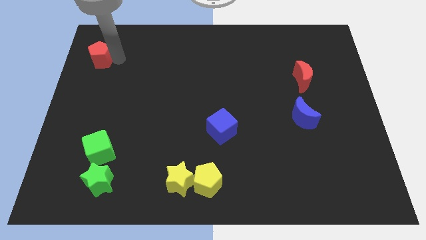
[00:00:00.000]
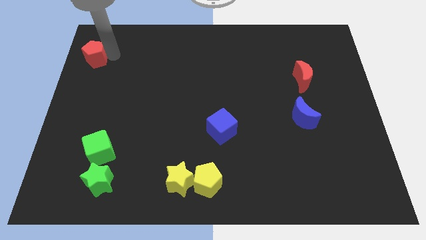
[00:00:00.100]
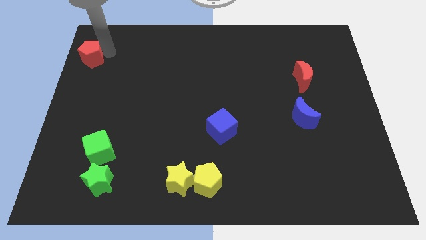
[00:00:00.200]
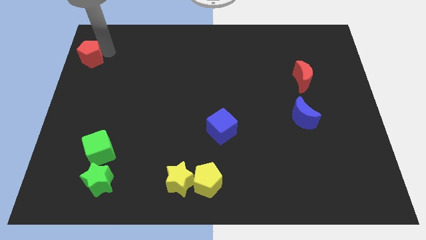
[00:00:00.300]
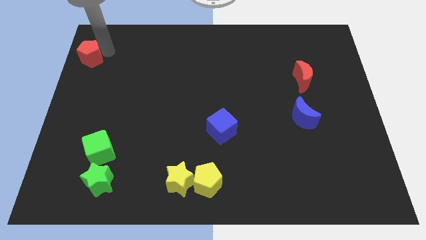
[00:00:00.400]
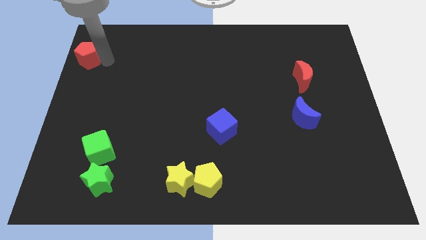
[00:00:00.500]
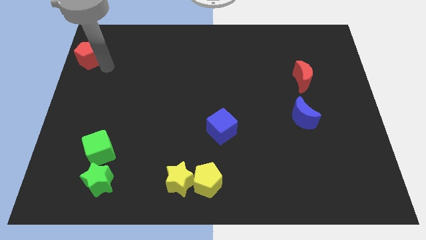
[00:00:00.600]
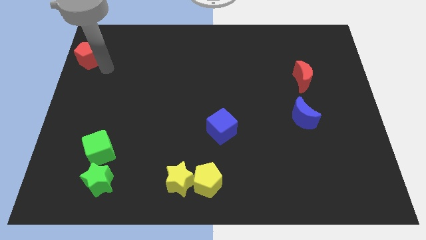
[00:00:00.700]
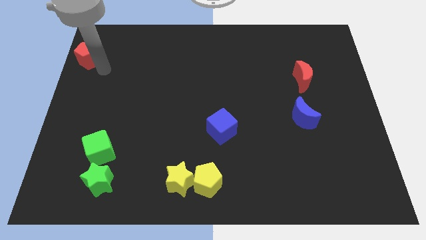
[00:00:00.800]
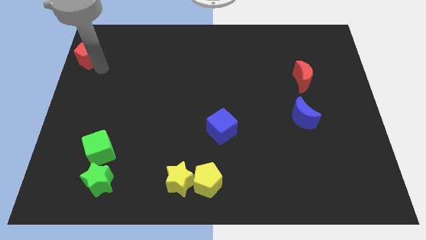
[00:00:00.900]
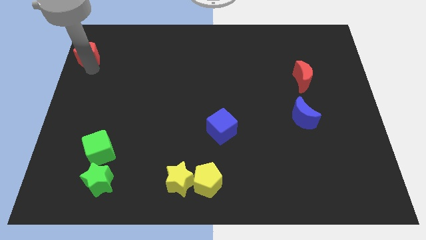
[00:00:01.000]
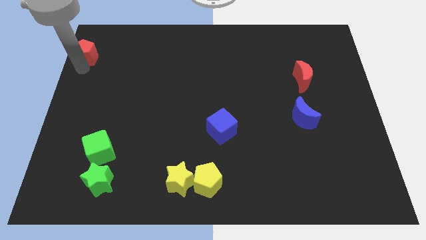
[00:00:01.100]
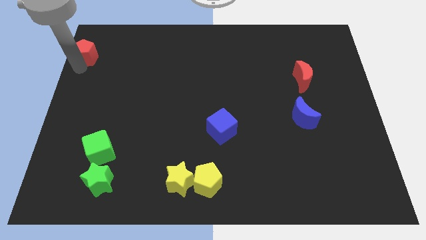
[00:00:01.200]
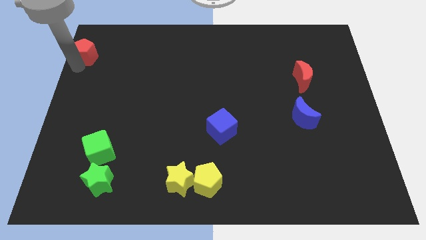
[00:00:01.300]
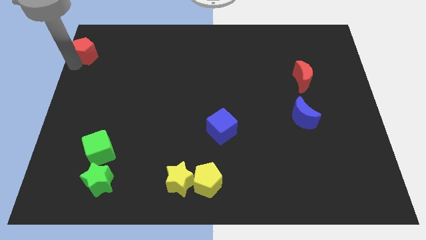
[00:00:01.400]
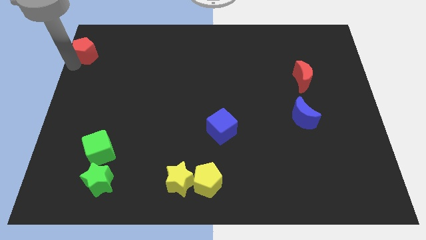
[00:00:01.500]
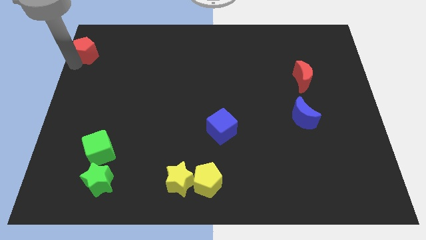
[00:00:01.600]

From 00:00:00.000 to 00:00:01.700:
move the red pentagon to the top left

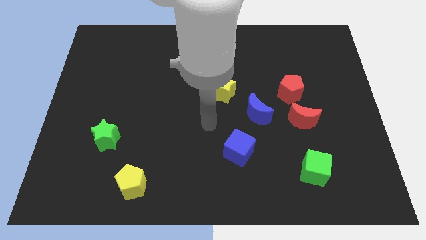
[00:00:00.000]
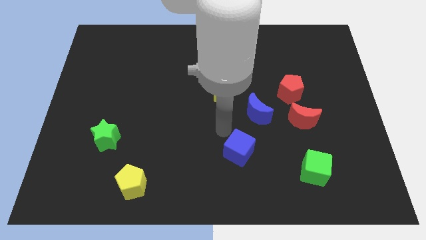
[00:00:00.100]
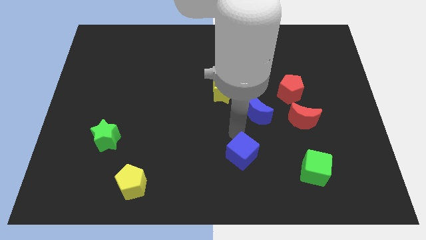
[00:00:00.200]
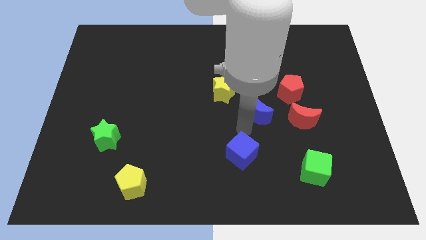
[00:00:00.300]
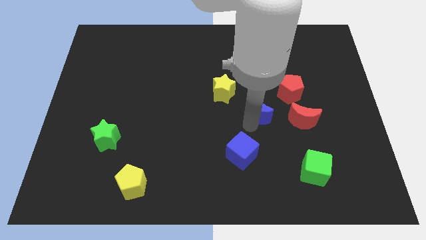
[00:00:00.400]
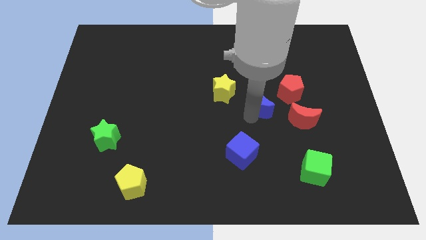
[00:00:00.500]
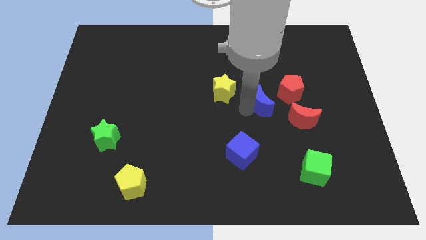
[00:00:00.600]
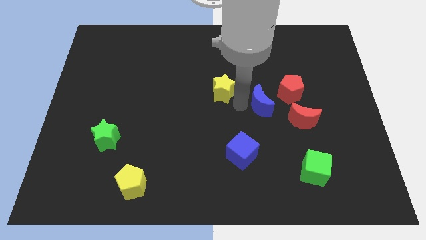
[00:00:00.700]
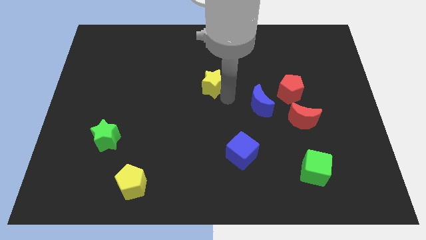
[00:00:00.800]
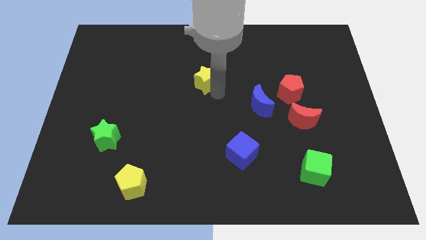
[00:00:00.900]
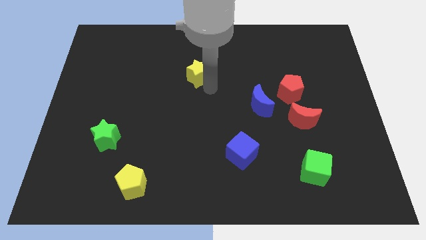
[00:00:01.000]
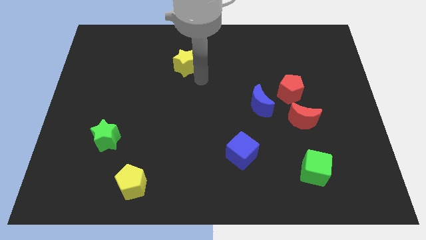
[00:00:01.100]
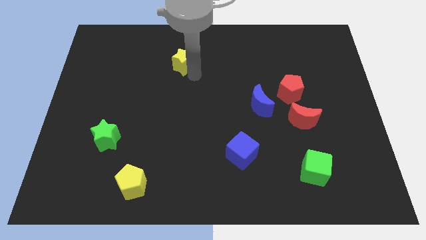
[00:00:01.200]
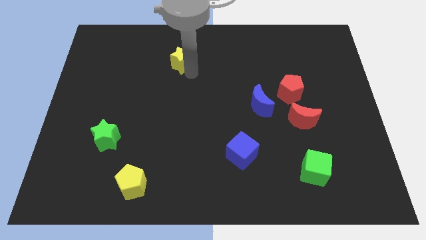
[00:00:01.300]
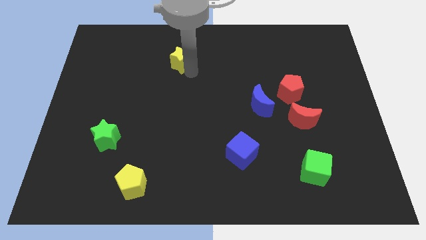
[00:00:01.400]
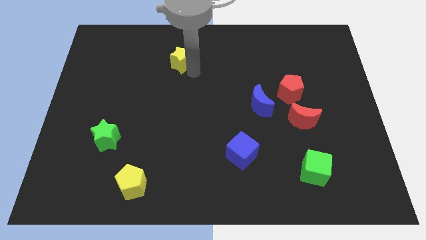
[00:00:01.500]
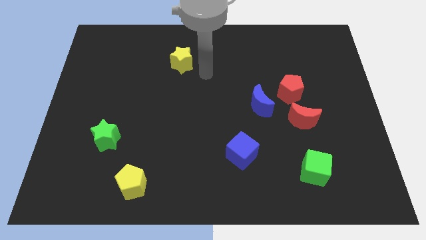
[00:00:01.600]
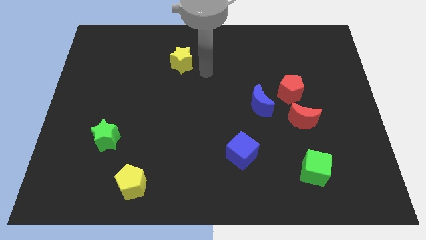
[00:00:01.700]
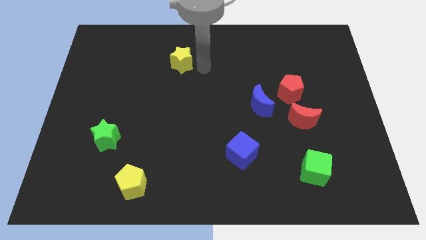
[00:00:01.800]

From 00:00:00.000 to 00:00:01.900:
move the yellow star towards the top center

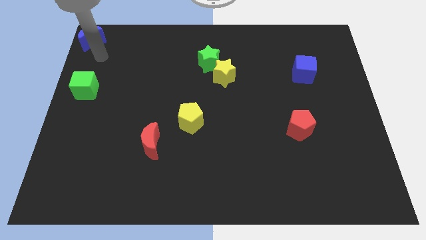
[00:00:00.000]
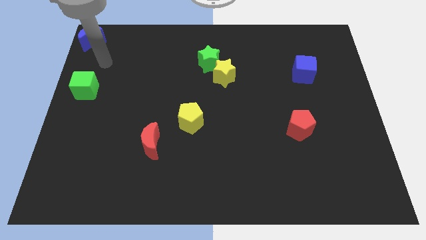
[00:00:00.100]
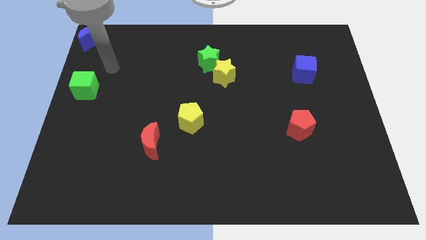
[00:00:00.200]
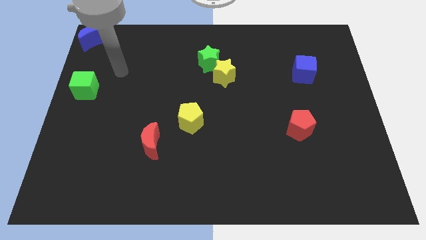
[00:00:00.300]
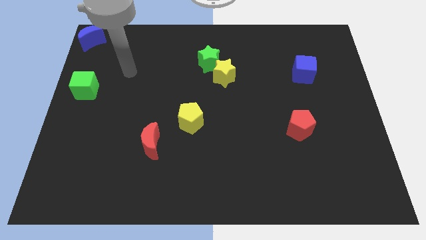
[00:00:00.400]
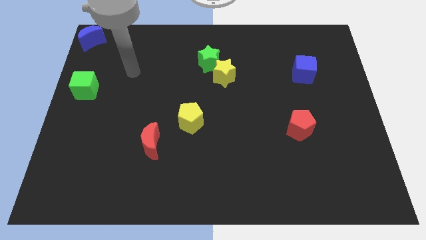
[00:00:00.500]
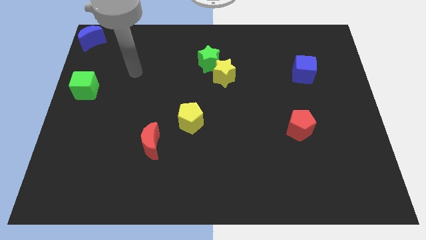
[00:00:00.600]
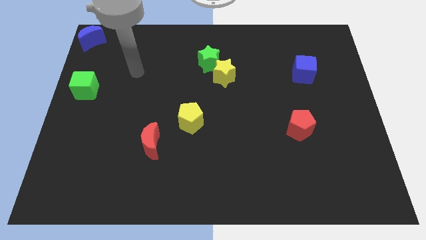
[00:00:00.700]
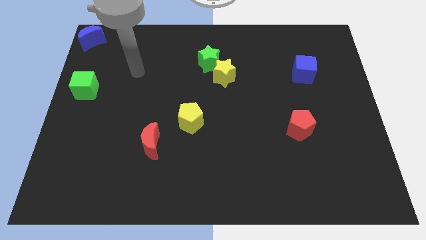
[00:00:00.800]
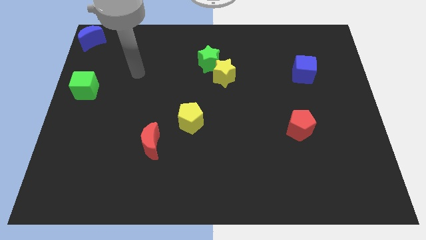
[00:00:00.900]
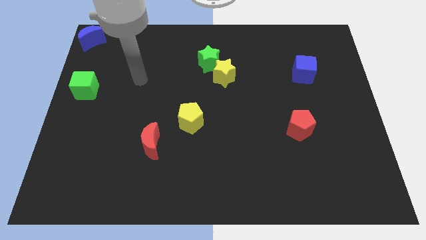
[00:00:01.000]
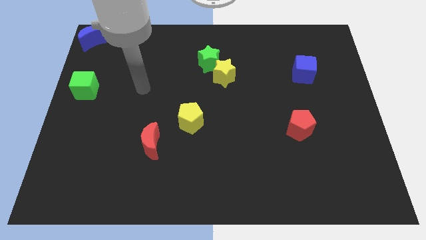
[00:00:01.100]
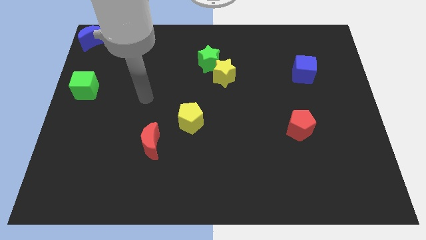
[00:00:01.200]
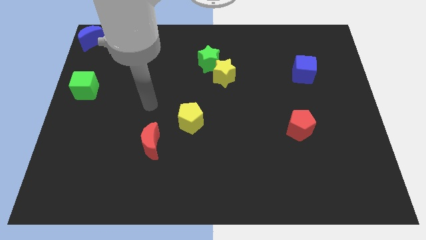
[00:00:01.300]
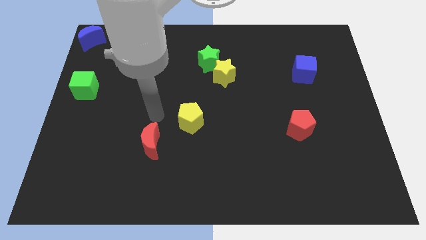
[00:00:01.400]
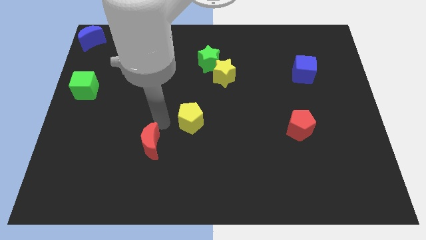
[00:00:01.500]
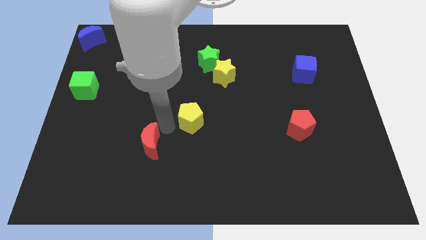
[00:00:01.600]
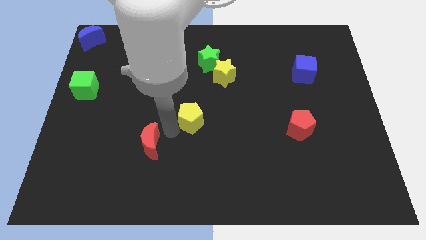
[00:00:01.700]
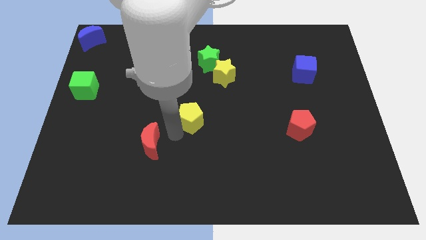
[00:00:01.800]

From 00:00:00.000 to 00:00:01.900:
move yourself away from the blue moon

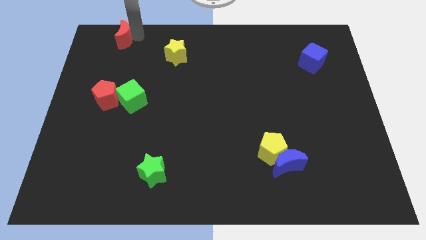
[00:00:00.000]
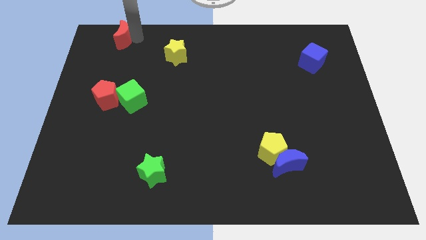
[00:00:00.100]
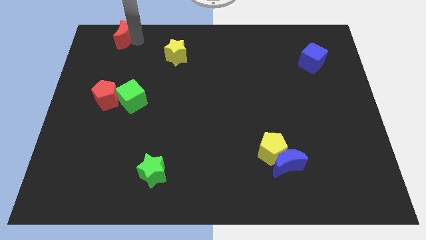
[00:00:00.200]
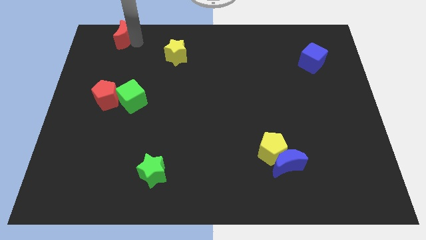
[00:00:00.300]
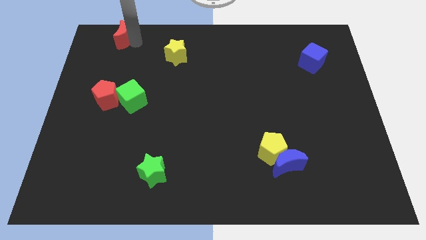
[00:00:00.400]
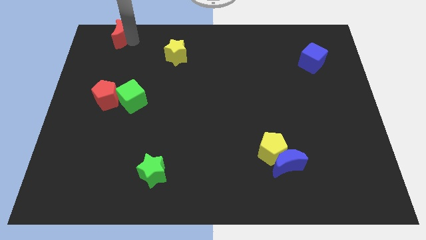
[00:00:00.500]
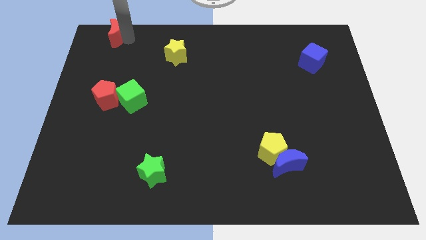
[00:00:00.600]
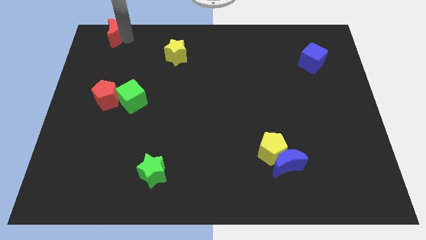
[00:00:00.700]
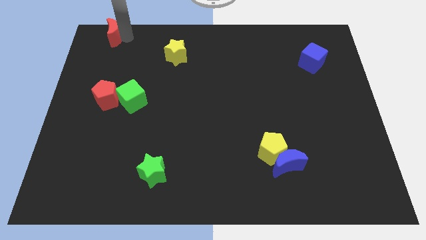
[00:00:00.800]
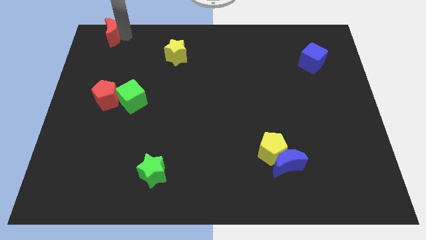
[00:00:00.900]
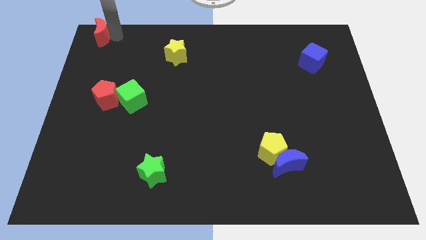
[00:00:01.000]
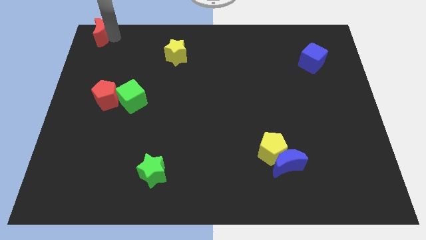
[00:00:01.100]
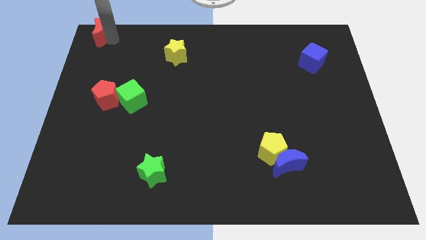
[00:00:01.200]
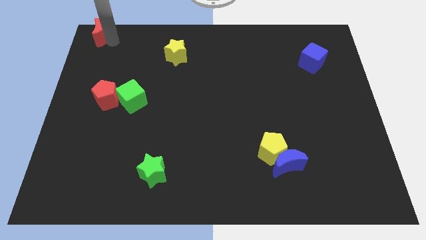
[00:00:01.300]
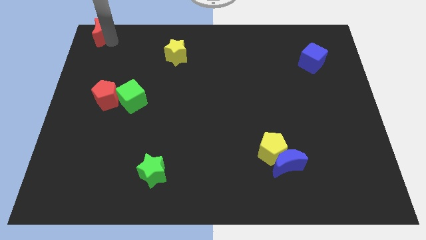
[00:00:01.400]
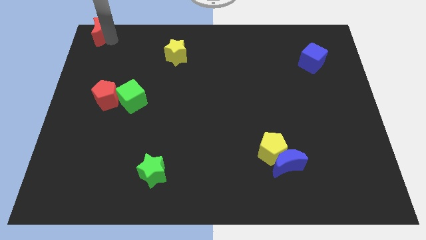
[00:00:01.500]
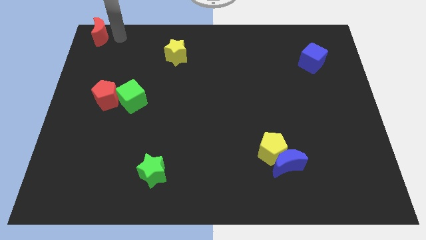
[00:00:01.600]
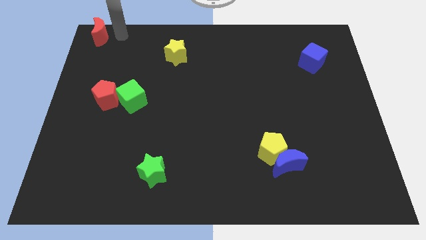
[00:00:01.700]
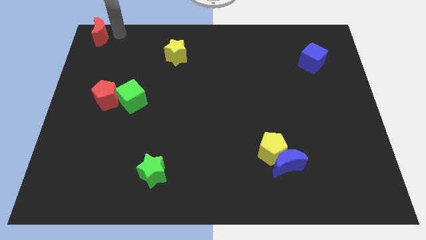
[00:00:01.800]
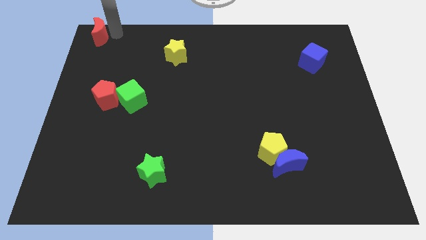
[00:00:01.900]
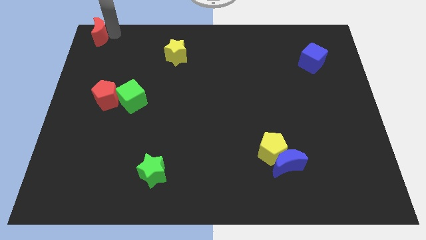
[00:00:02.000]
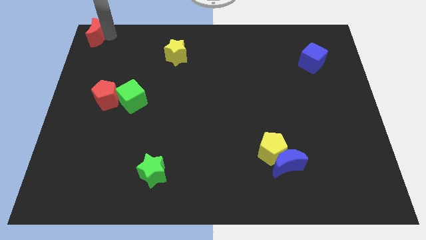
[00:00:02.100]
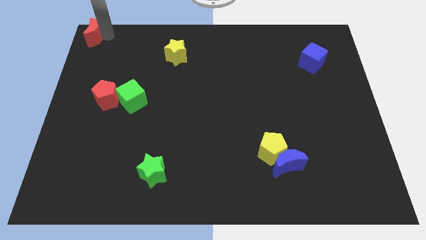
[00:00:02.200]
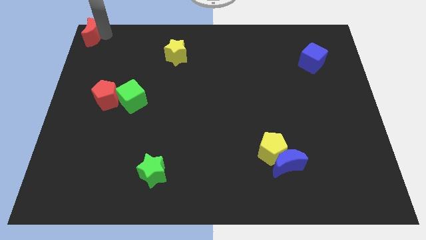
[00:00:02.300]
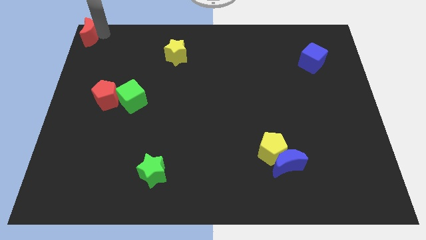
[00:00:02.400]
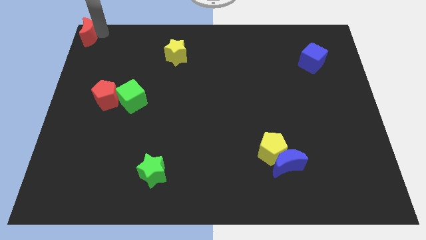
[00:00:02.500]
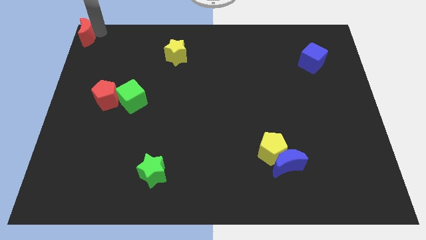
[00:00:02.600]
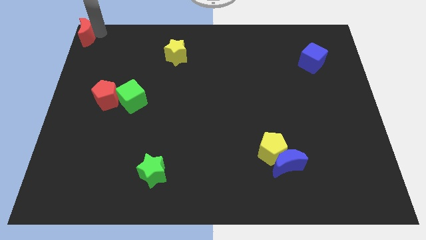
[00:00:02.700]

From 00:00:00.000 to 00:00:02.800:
place red crescent towards top left corner

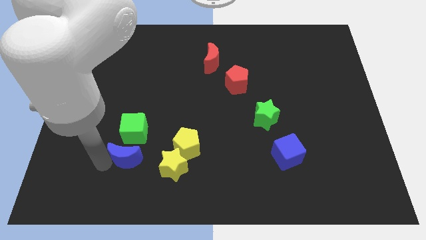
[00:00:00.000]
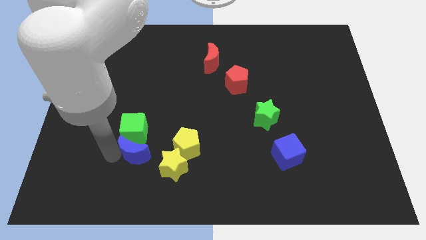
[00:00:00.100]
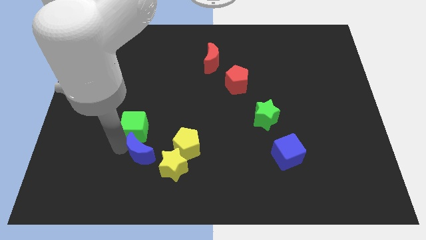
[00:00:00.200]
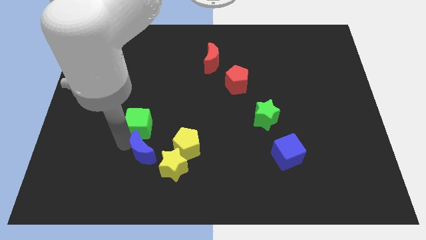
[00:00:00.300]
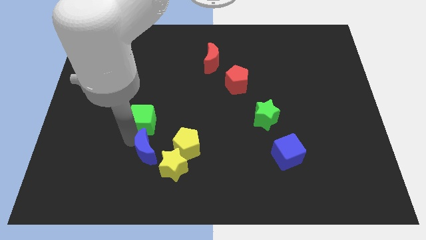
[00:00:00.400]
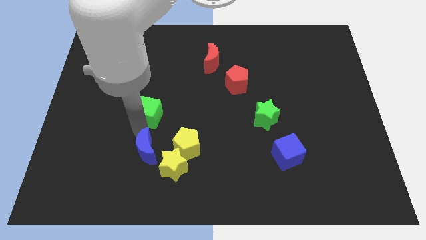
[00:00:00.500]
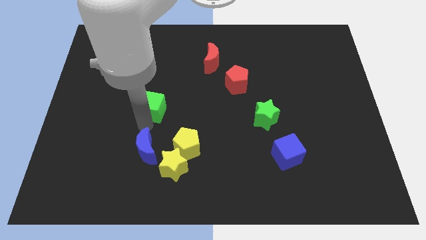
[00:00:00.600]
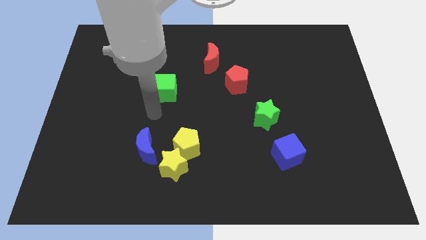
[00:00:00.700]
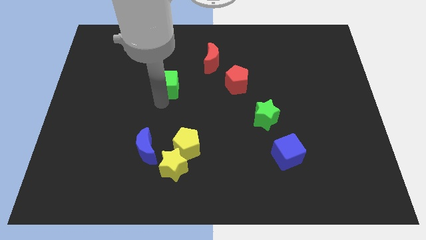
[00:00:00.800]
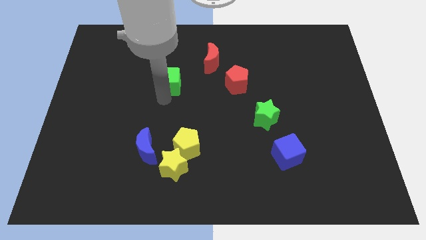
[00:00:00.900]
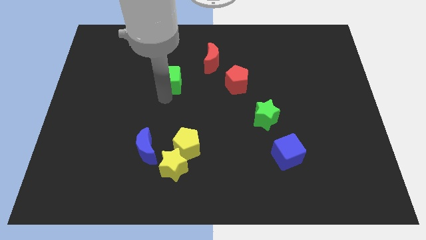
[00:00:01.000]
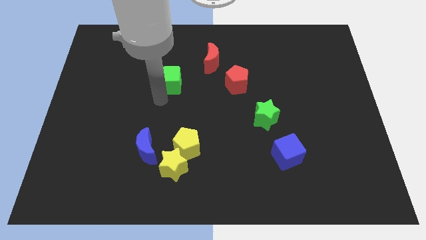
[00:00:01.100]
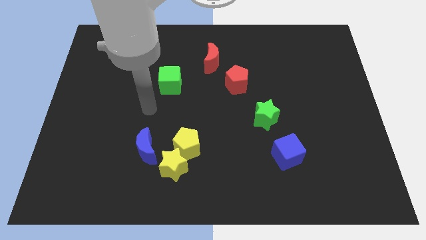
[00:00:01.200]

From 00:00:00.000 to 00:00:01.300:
push the green block towards the red crescent
